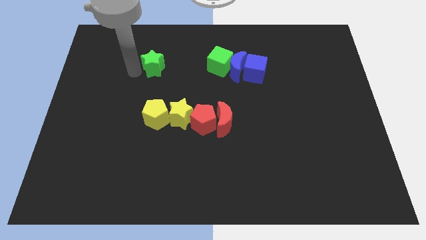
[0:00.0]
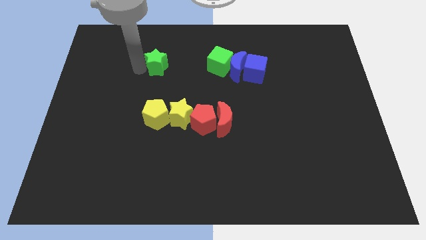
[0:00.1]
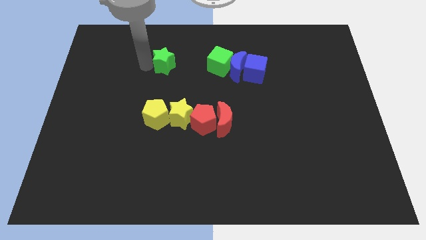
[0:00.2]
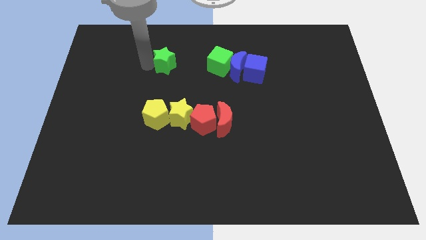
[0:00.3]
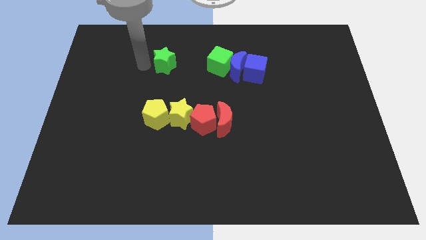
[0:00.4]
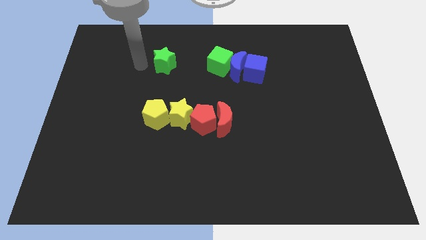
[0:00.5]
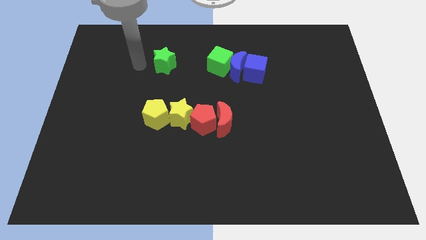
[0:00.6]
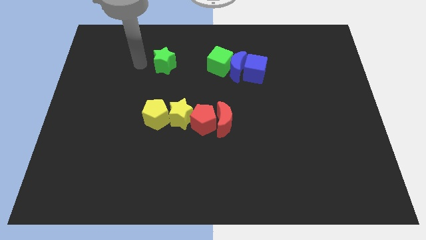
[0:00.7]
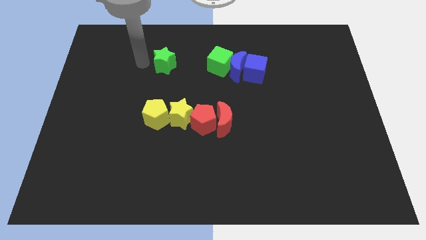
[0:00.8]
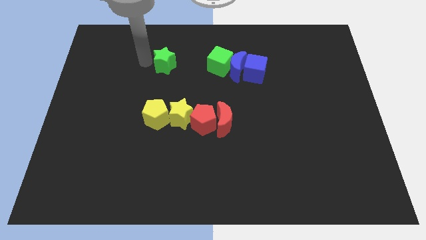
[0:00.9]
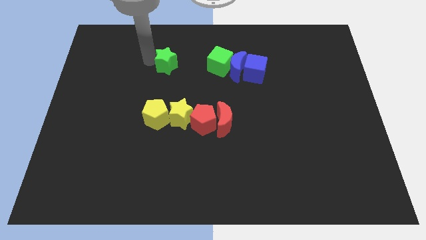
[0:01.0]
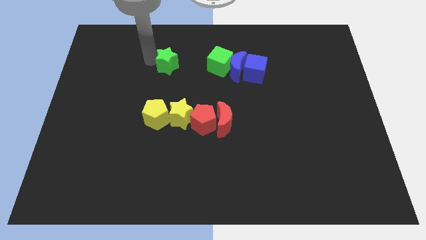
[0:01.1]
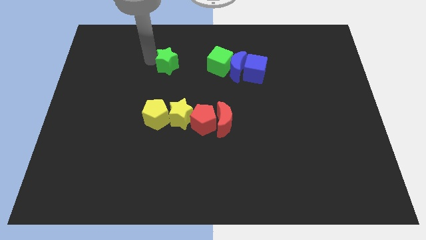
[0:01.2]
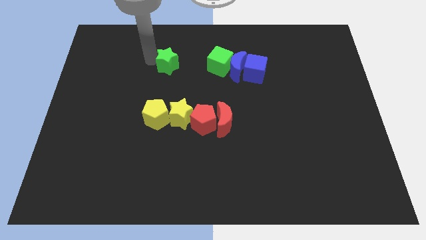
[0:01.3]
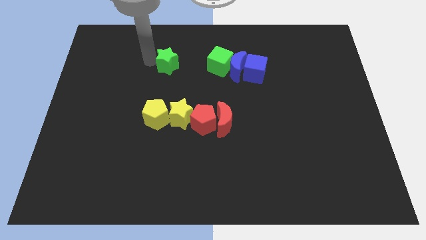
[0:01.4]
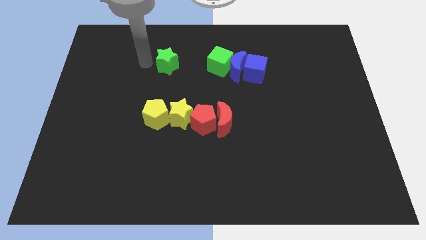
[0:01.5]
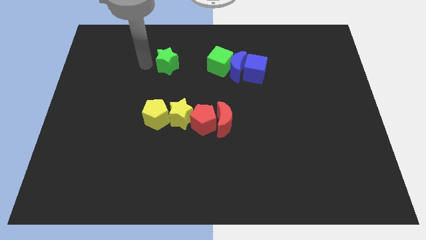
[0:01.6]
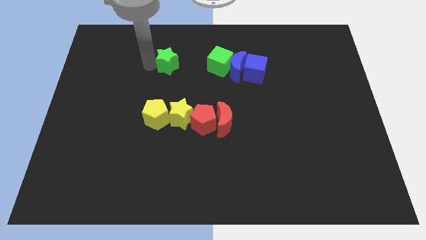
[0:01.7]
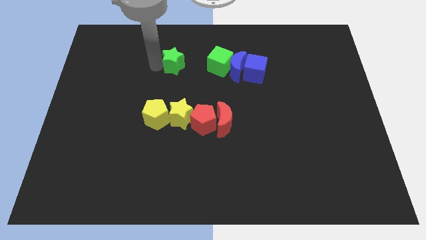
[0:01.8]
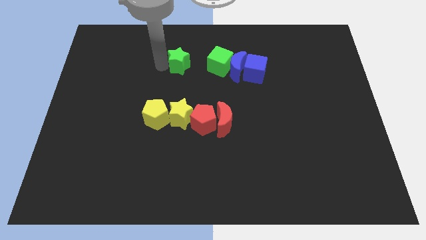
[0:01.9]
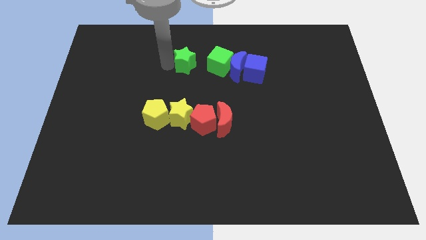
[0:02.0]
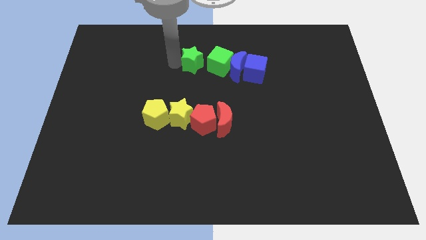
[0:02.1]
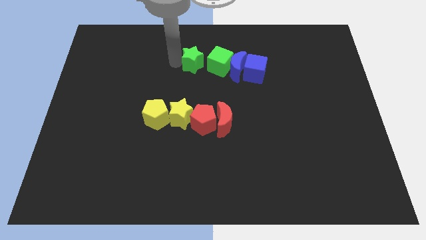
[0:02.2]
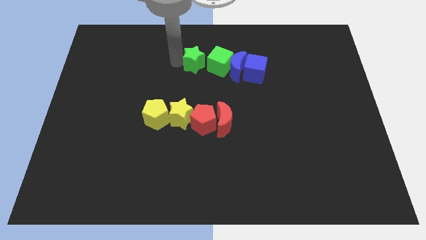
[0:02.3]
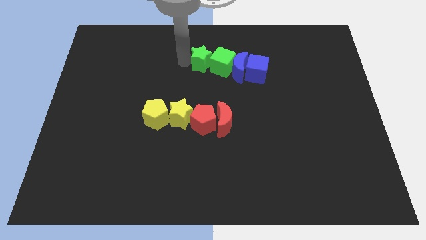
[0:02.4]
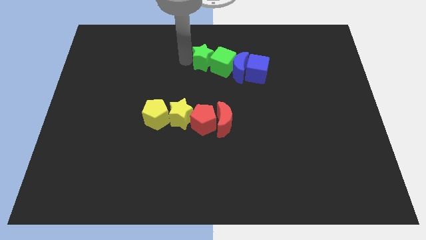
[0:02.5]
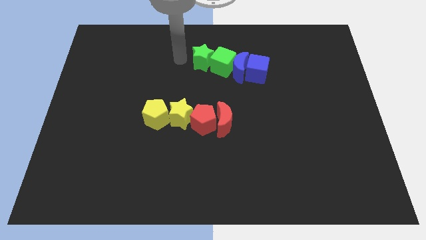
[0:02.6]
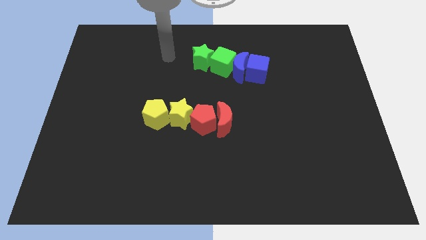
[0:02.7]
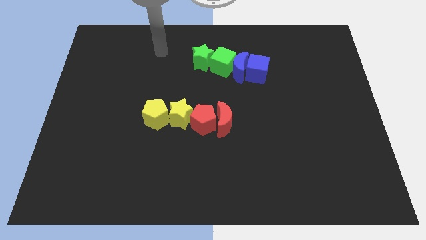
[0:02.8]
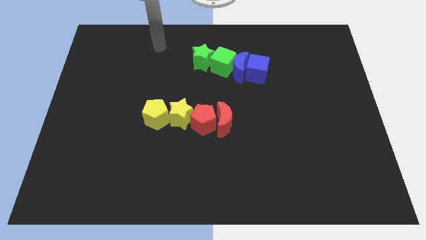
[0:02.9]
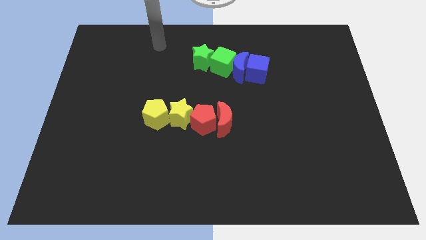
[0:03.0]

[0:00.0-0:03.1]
push the green star into the green cube

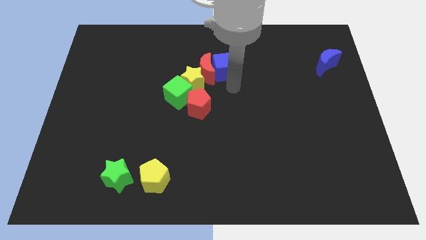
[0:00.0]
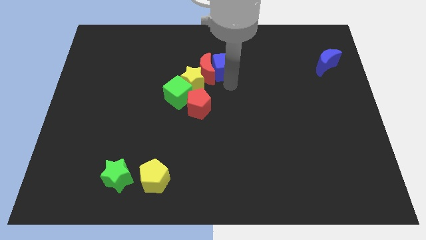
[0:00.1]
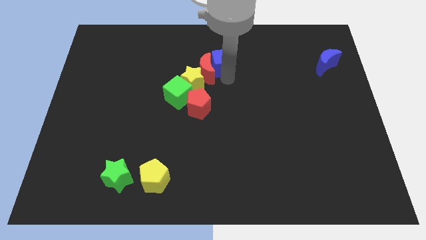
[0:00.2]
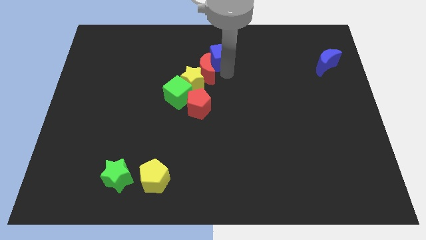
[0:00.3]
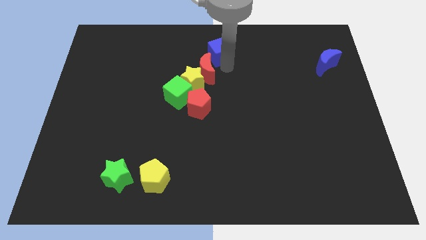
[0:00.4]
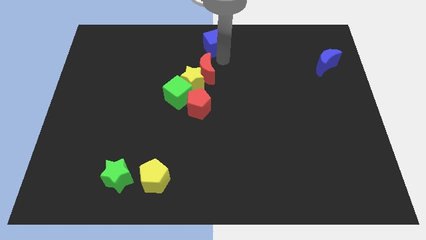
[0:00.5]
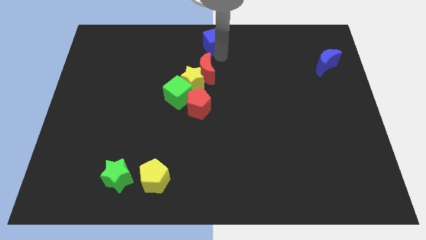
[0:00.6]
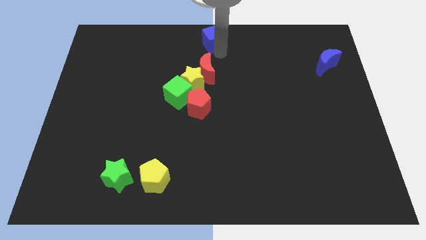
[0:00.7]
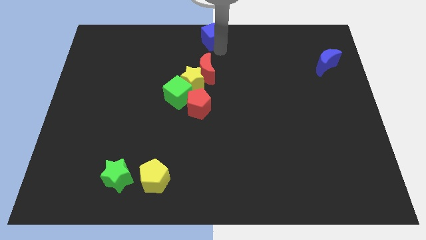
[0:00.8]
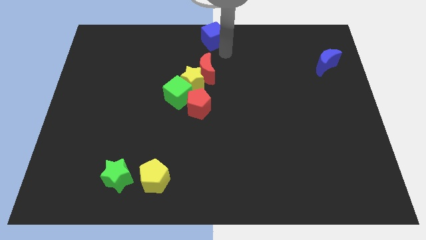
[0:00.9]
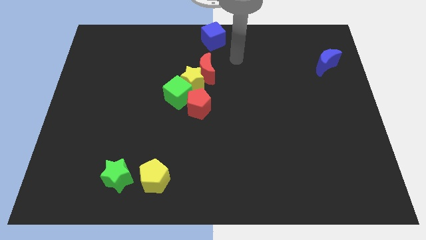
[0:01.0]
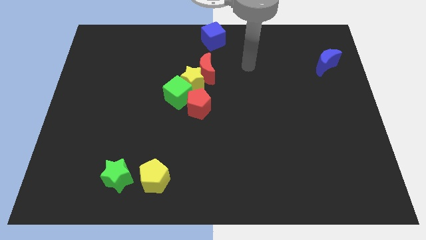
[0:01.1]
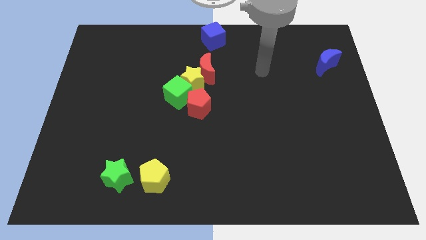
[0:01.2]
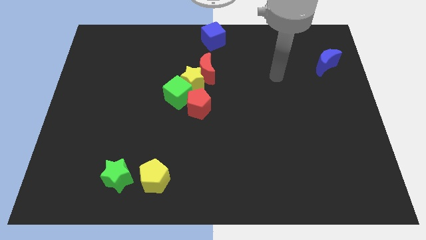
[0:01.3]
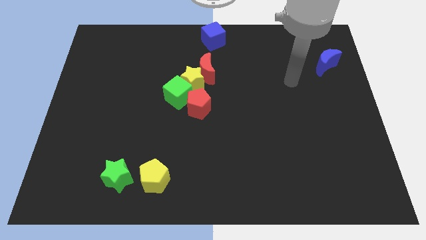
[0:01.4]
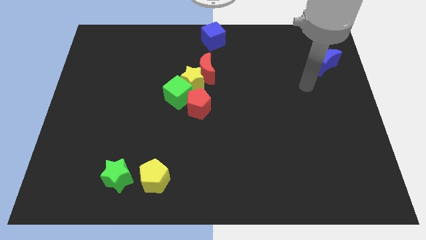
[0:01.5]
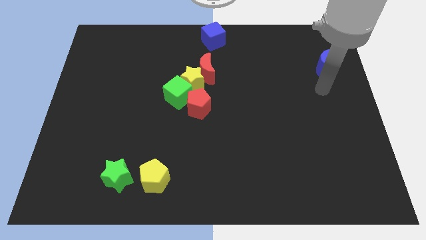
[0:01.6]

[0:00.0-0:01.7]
place blue cube to the top center

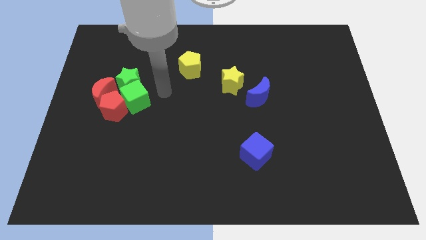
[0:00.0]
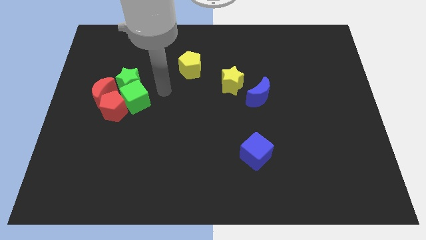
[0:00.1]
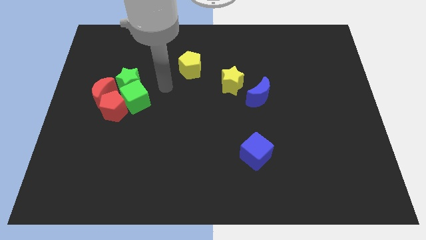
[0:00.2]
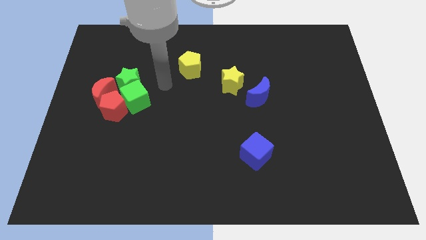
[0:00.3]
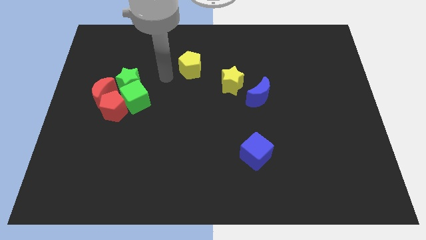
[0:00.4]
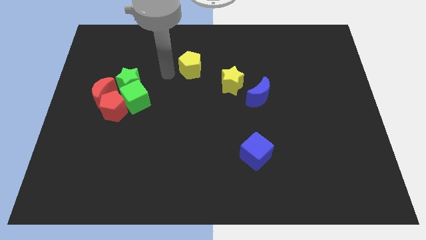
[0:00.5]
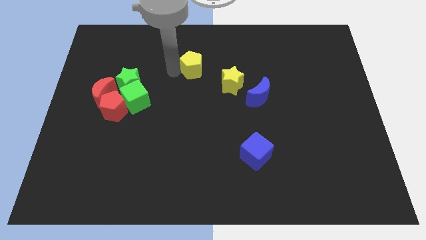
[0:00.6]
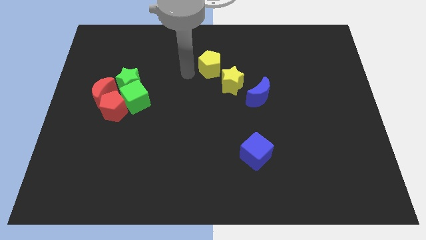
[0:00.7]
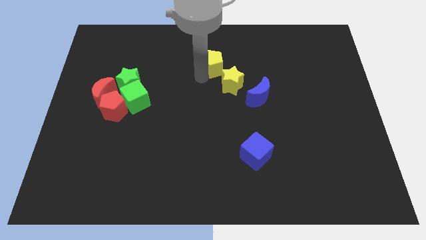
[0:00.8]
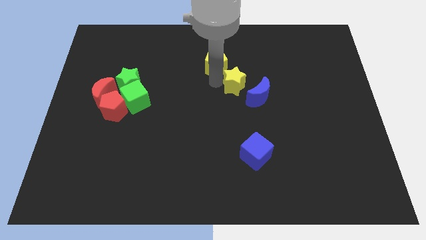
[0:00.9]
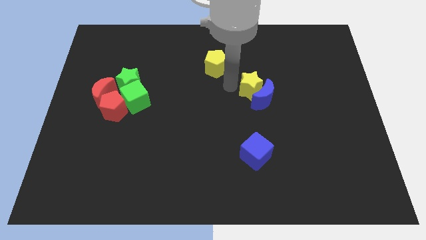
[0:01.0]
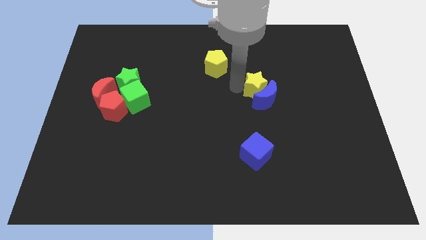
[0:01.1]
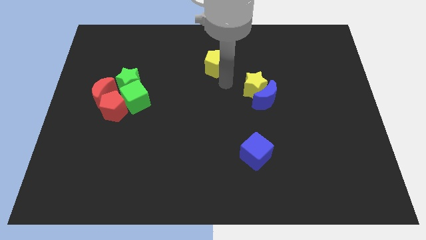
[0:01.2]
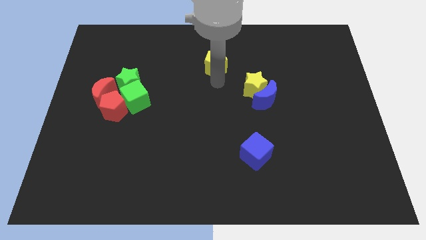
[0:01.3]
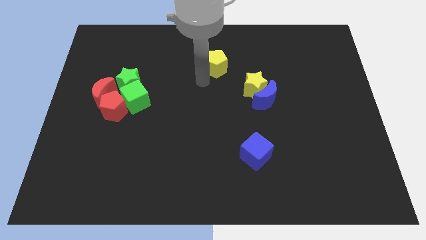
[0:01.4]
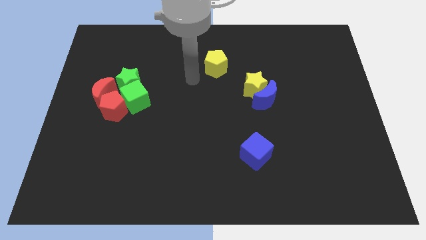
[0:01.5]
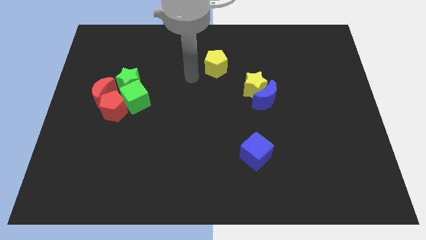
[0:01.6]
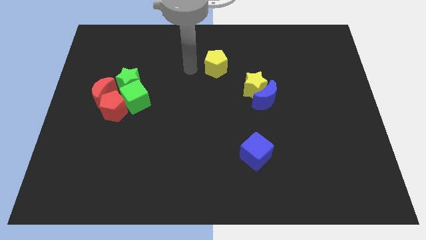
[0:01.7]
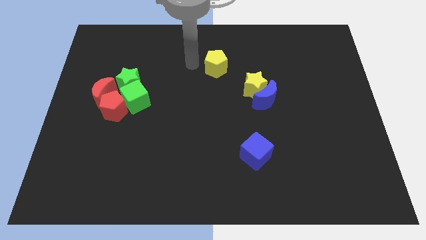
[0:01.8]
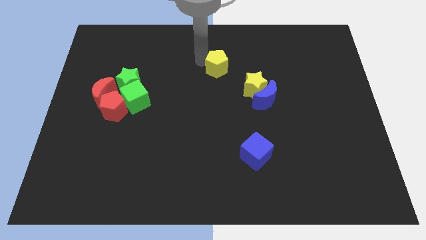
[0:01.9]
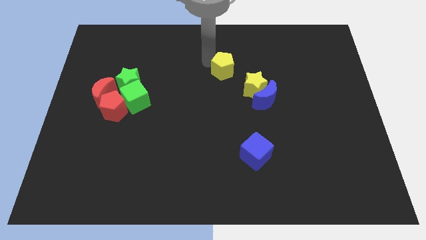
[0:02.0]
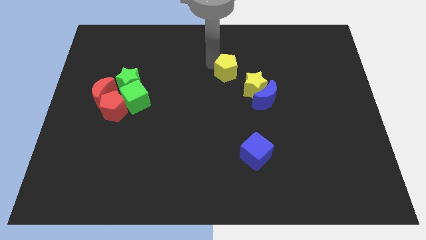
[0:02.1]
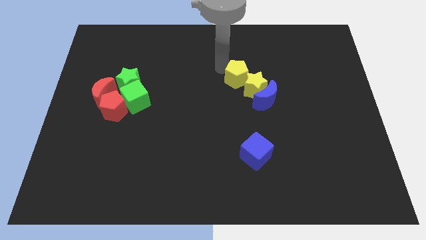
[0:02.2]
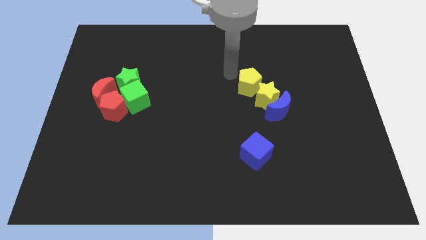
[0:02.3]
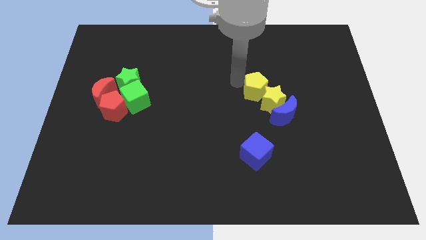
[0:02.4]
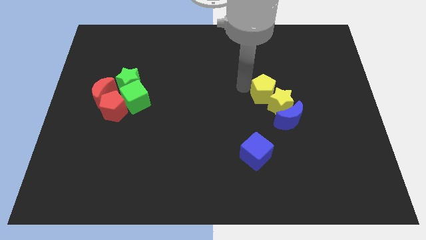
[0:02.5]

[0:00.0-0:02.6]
move yellow blocks into blue moon

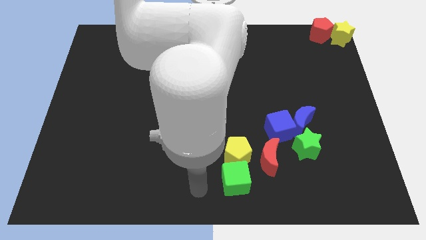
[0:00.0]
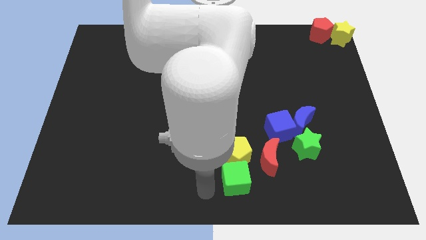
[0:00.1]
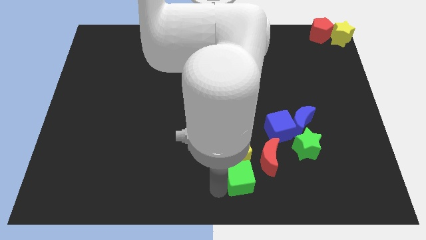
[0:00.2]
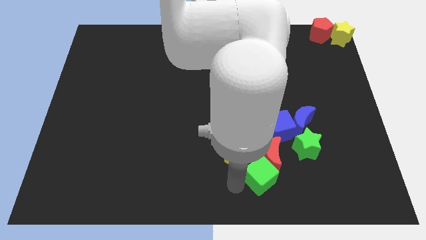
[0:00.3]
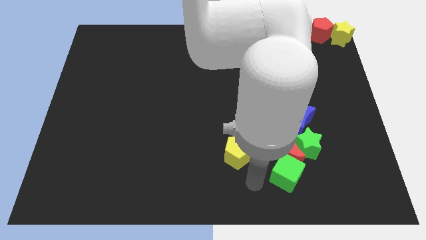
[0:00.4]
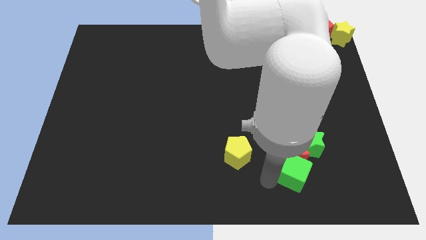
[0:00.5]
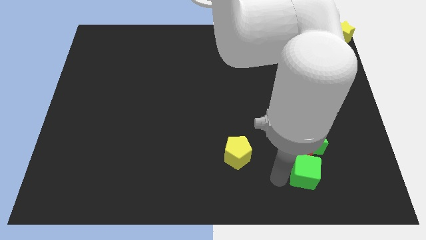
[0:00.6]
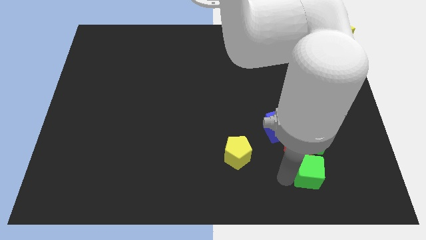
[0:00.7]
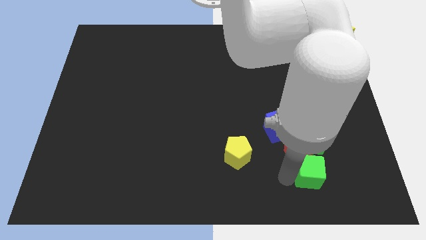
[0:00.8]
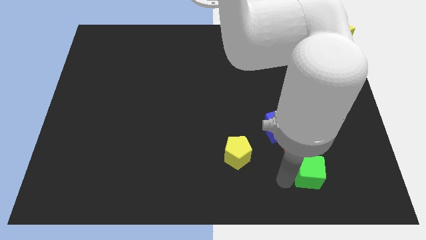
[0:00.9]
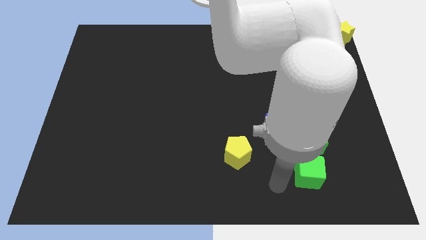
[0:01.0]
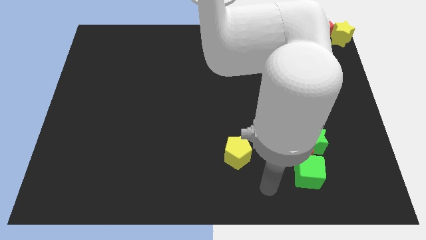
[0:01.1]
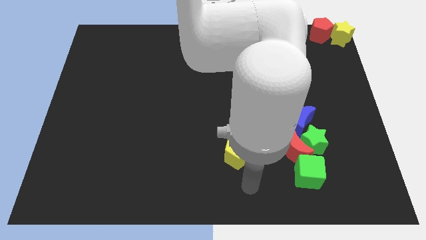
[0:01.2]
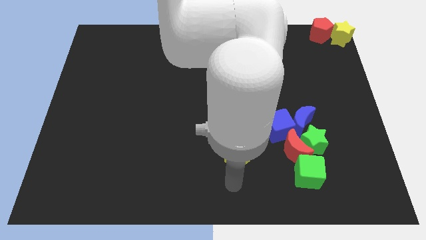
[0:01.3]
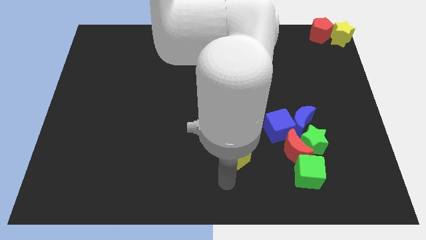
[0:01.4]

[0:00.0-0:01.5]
push the green cube into the bottom of the red crescent
